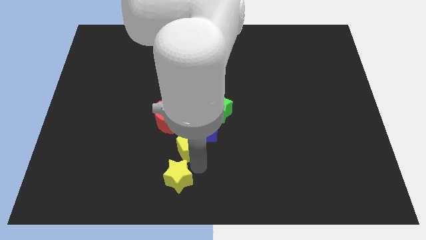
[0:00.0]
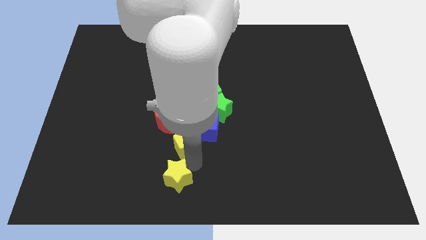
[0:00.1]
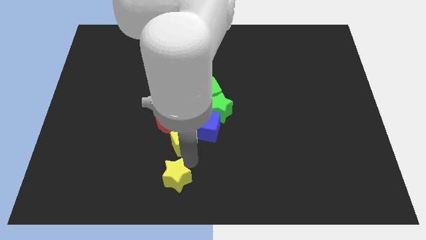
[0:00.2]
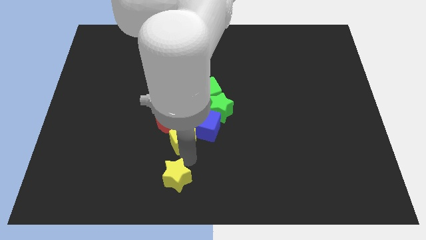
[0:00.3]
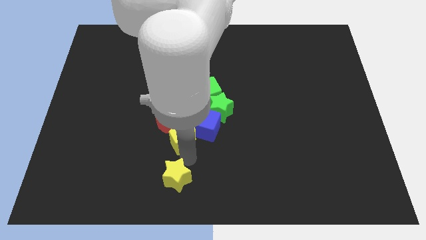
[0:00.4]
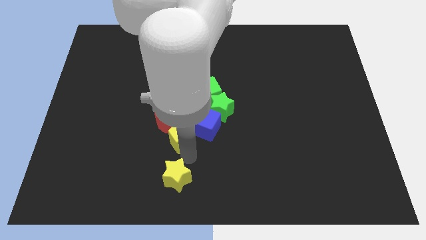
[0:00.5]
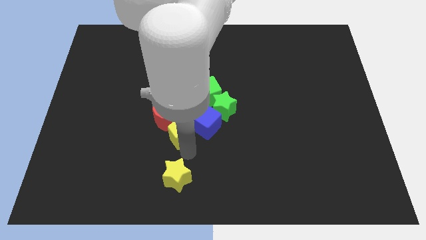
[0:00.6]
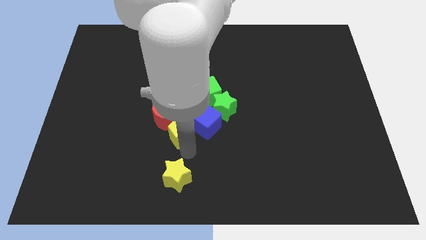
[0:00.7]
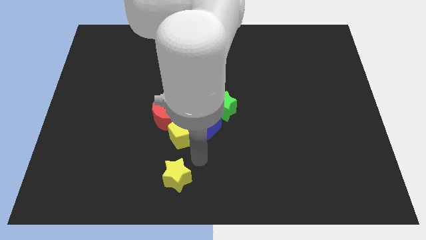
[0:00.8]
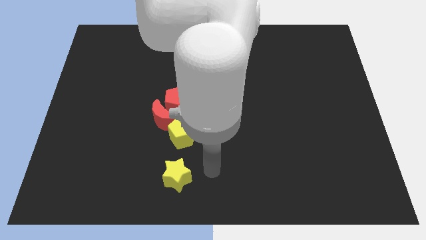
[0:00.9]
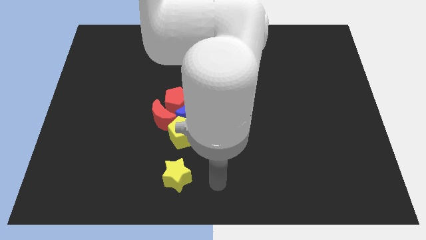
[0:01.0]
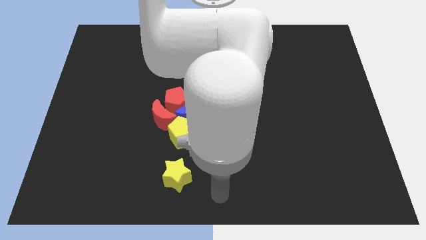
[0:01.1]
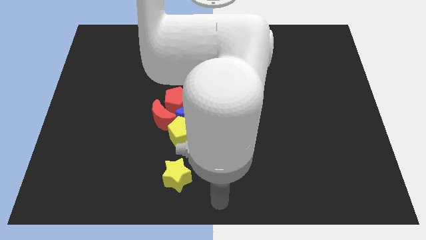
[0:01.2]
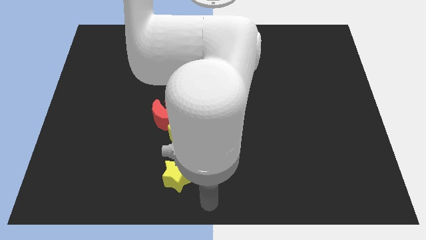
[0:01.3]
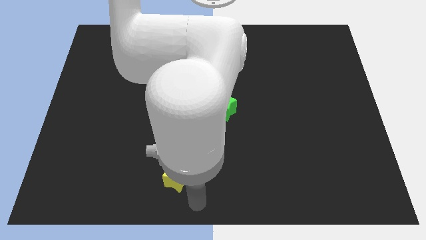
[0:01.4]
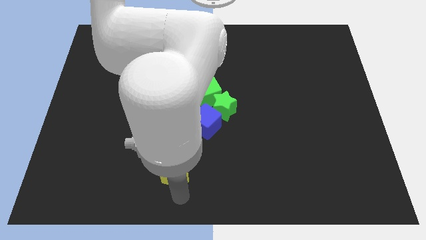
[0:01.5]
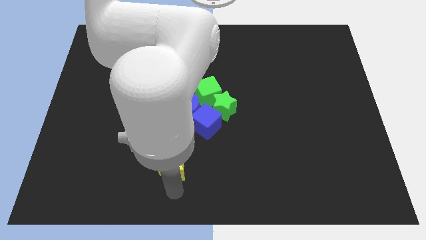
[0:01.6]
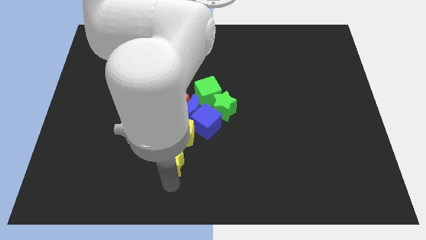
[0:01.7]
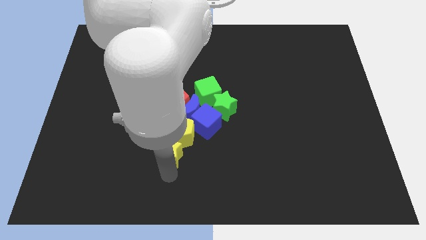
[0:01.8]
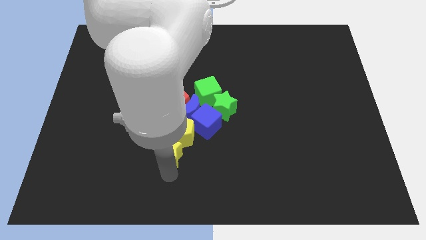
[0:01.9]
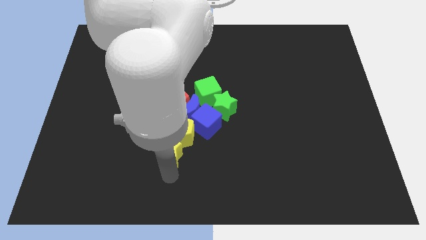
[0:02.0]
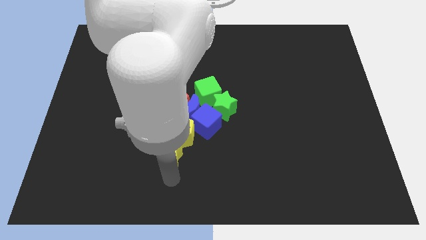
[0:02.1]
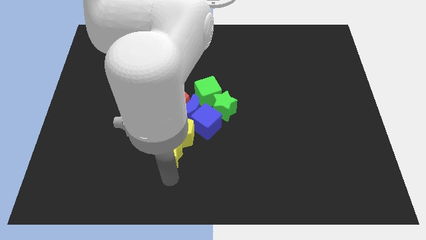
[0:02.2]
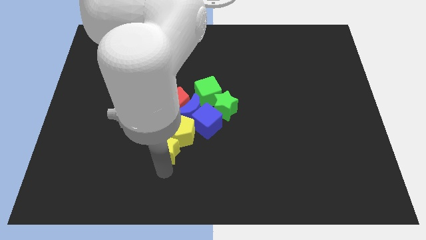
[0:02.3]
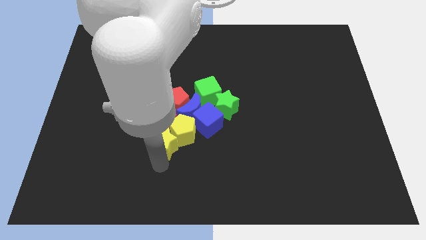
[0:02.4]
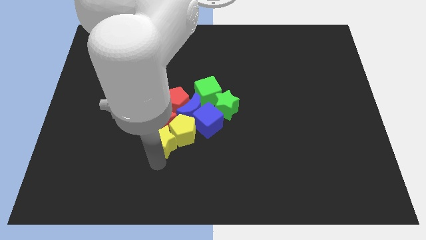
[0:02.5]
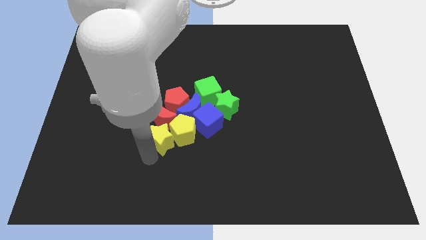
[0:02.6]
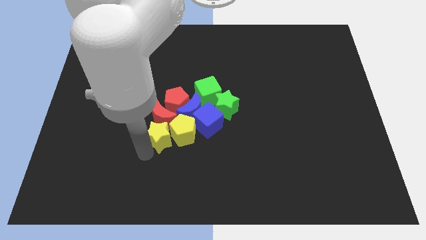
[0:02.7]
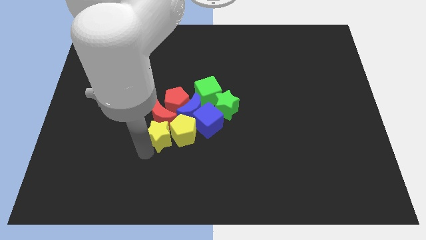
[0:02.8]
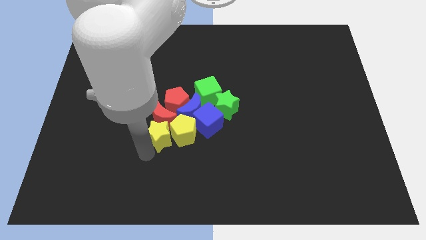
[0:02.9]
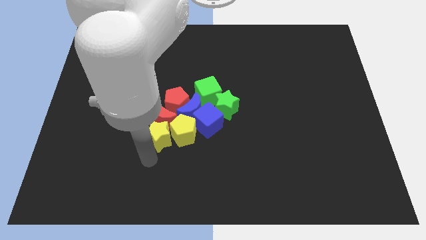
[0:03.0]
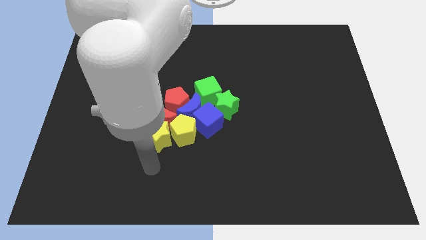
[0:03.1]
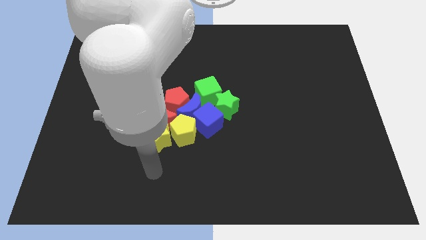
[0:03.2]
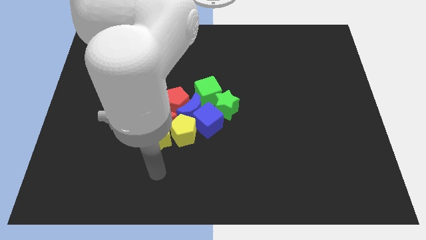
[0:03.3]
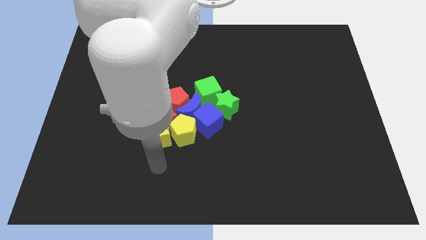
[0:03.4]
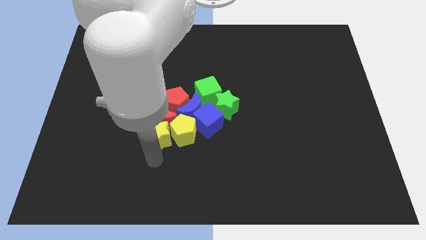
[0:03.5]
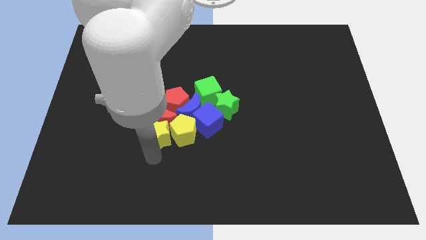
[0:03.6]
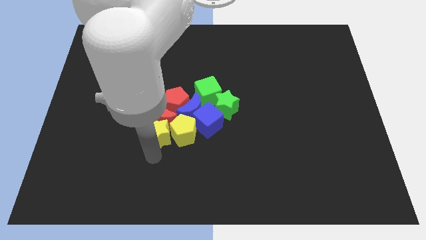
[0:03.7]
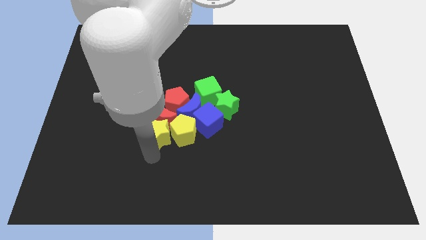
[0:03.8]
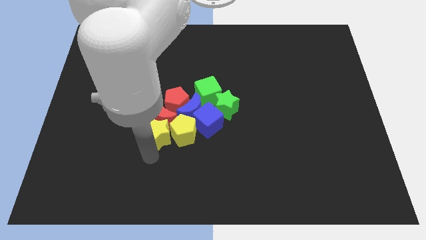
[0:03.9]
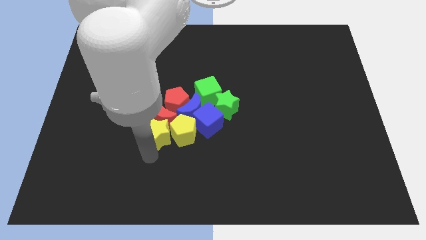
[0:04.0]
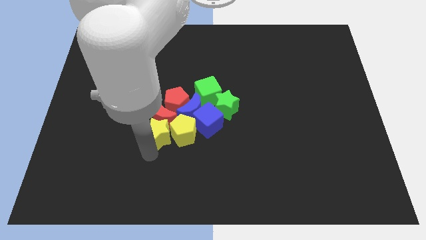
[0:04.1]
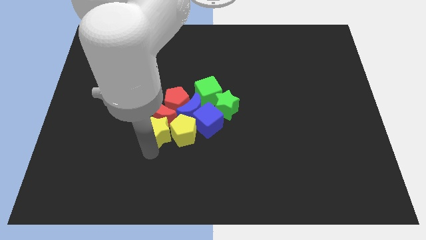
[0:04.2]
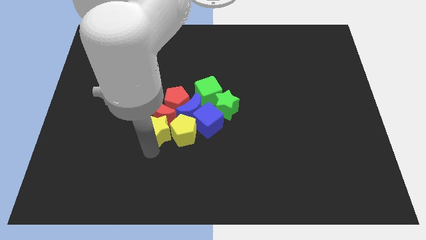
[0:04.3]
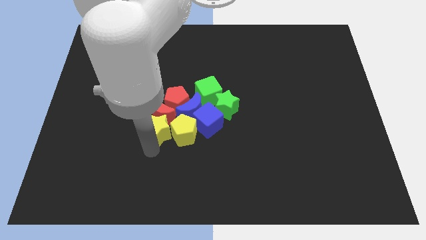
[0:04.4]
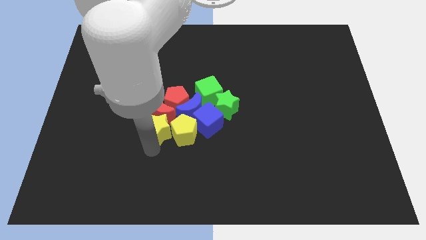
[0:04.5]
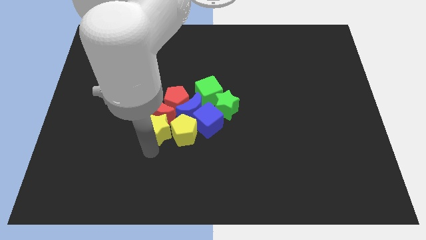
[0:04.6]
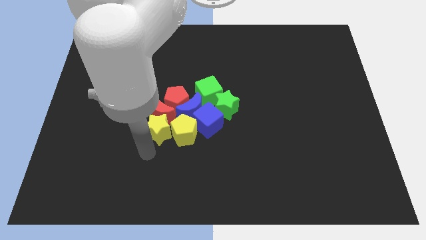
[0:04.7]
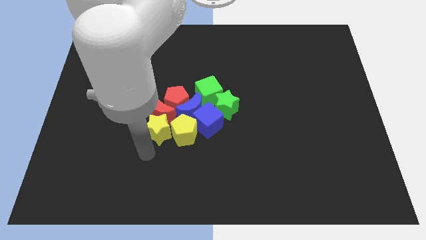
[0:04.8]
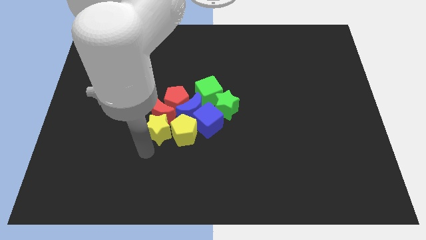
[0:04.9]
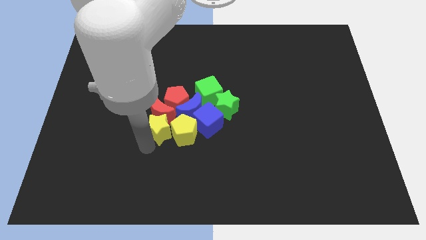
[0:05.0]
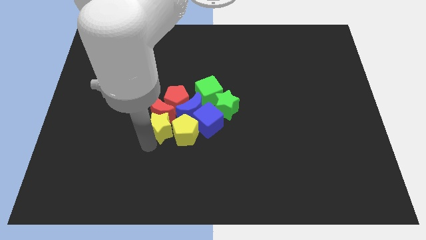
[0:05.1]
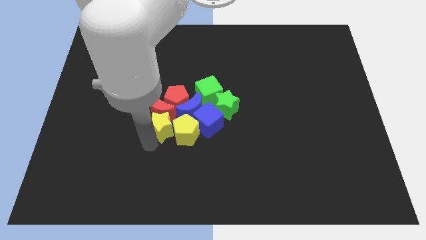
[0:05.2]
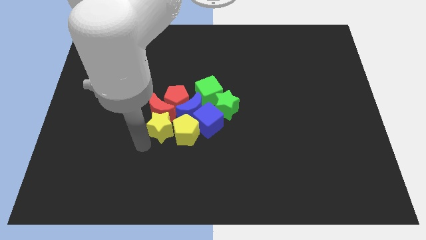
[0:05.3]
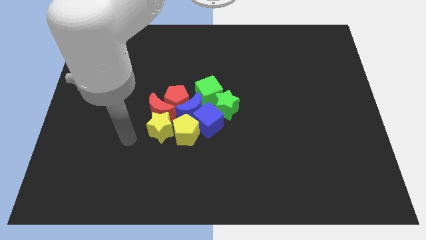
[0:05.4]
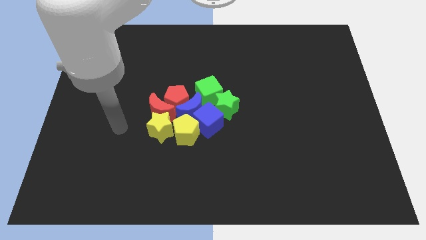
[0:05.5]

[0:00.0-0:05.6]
push the yellow star and yellow pentagon into group of blocks towards the center of the board

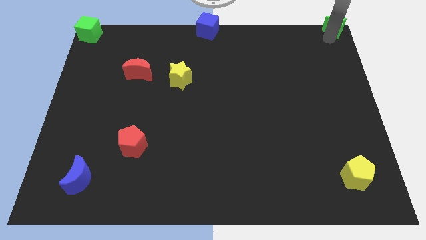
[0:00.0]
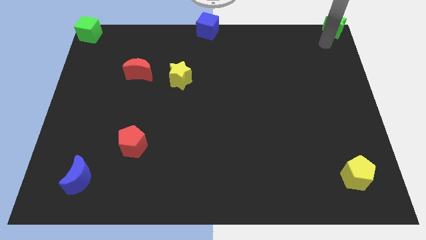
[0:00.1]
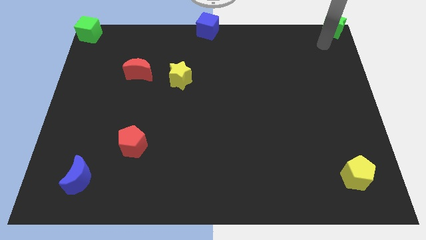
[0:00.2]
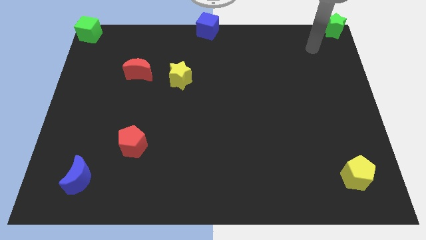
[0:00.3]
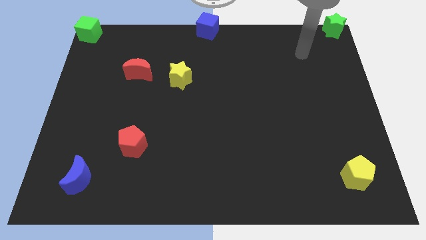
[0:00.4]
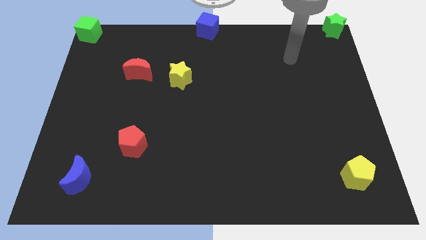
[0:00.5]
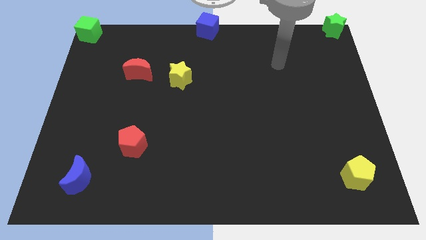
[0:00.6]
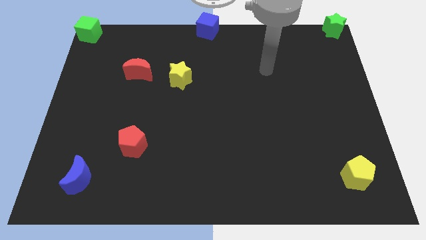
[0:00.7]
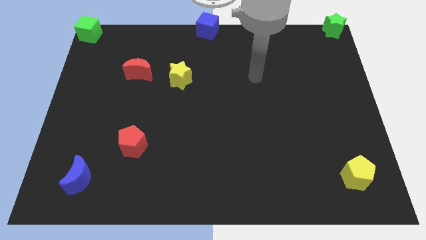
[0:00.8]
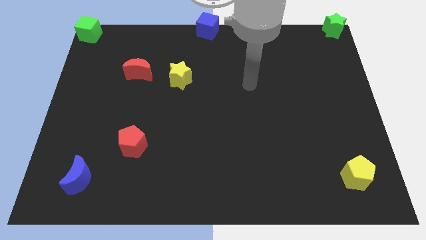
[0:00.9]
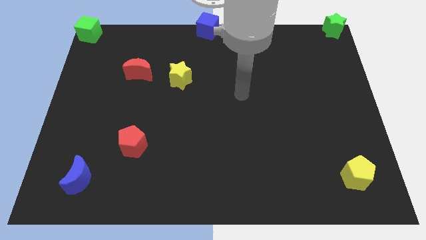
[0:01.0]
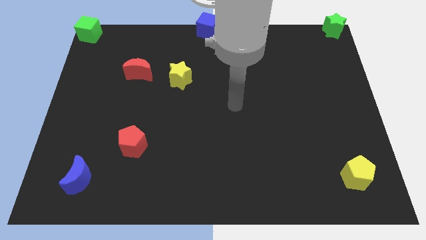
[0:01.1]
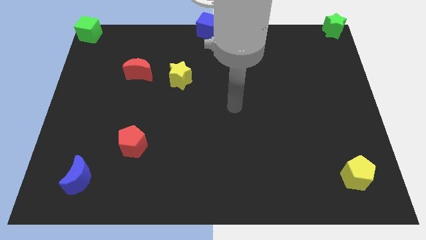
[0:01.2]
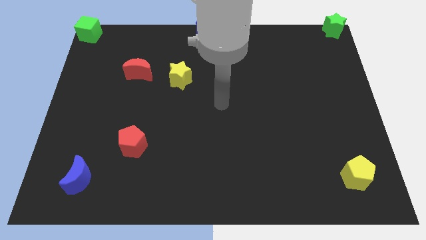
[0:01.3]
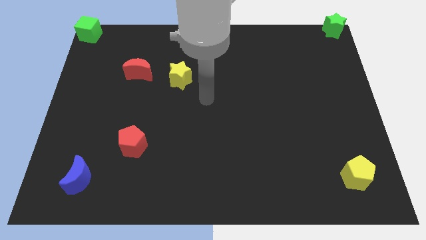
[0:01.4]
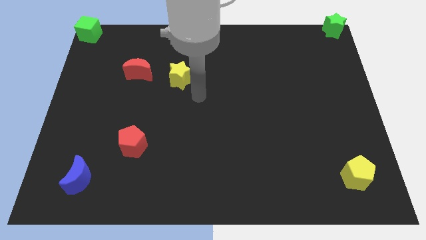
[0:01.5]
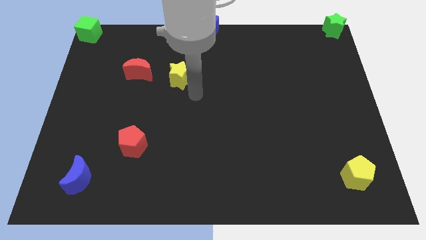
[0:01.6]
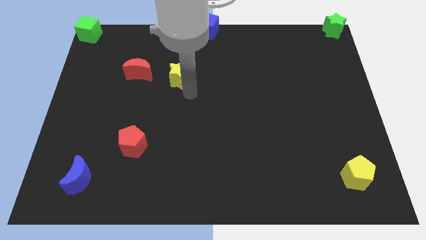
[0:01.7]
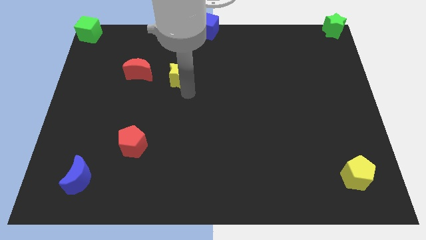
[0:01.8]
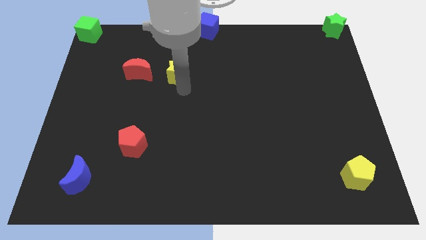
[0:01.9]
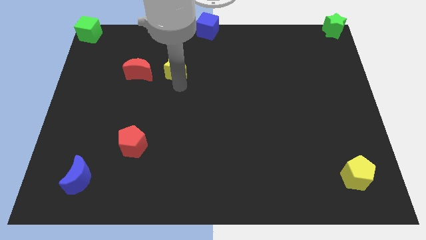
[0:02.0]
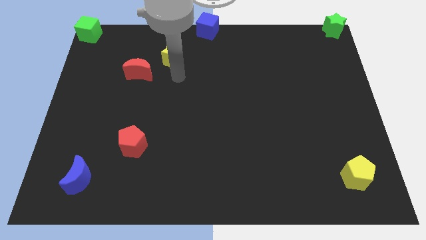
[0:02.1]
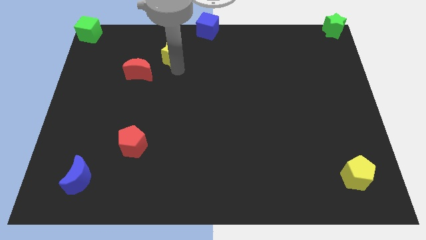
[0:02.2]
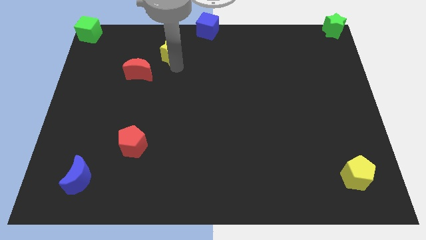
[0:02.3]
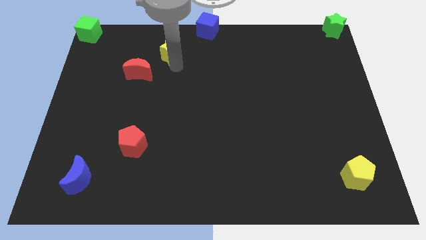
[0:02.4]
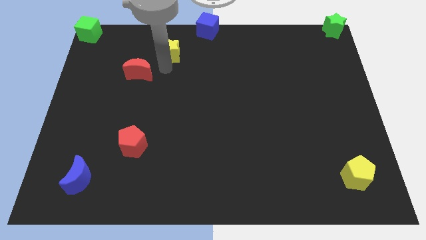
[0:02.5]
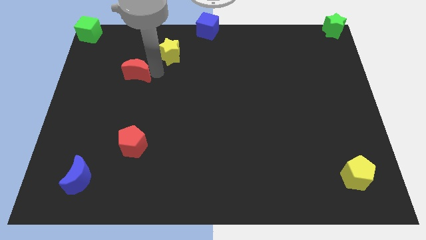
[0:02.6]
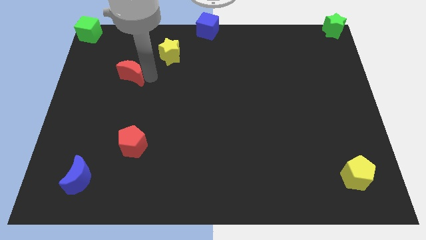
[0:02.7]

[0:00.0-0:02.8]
move yellow star parallel towards red crescent

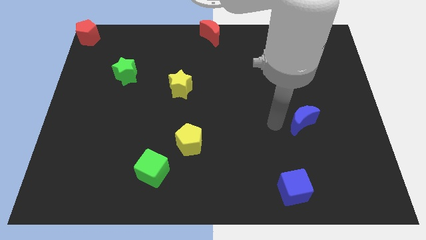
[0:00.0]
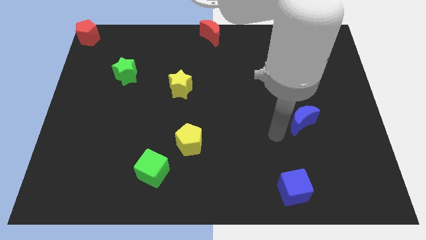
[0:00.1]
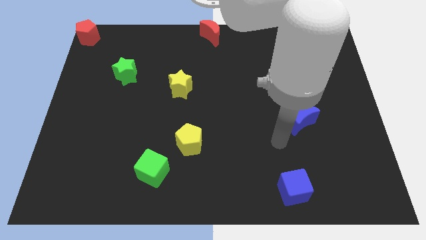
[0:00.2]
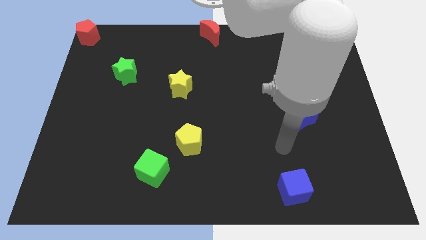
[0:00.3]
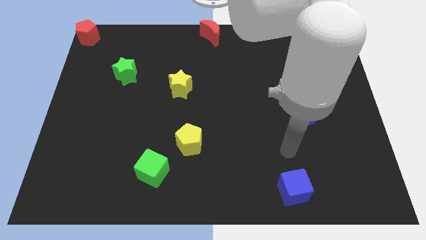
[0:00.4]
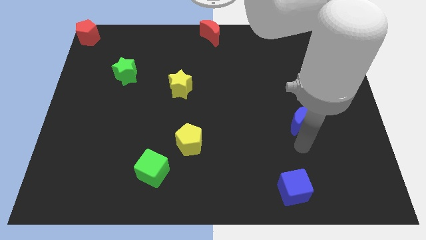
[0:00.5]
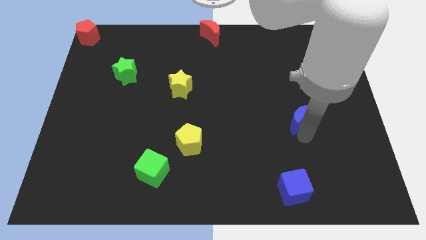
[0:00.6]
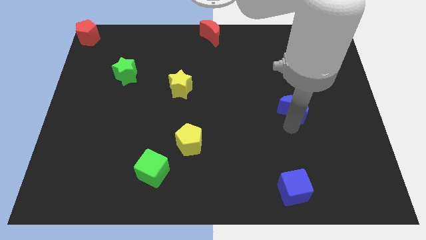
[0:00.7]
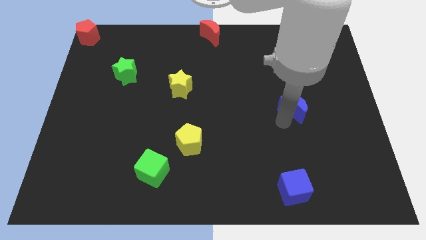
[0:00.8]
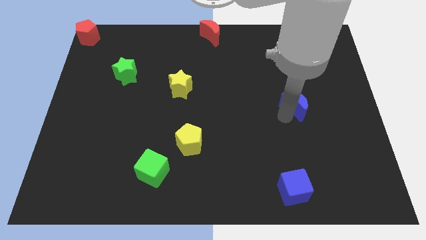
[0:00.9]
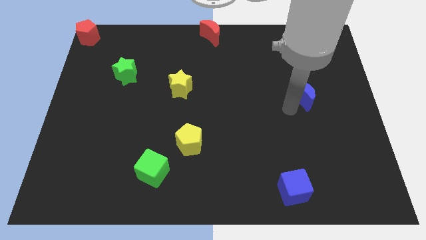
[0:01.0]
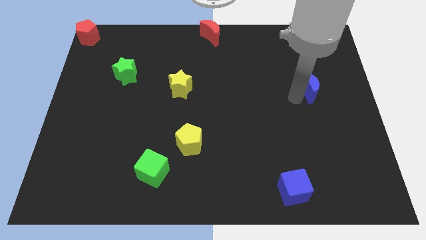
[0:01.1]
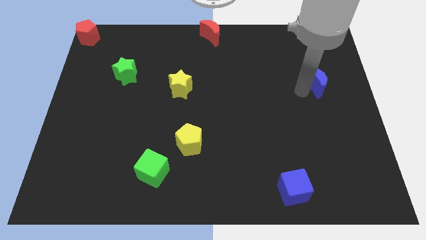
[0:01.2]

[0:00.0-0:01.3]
slide the blue moon horizontally to the right side of the yellow star
